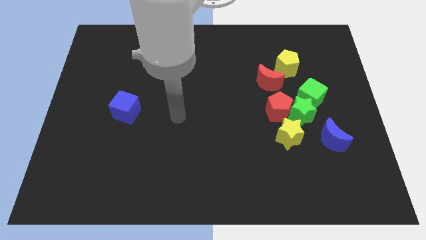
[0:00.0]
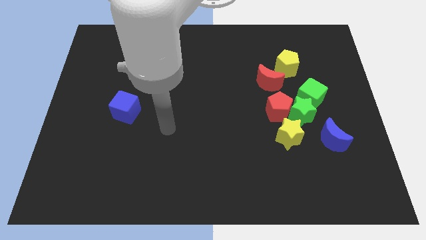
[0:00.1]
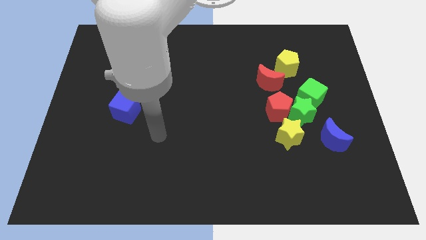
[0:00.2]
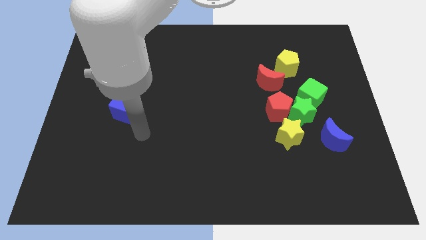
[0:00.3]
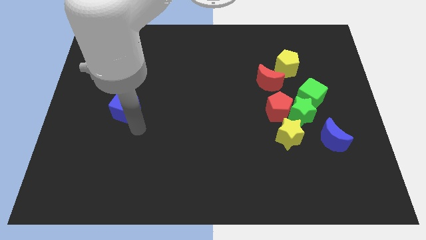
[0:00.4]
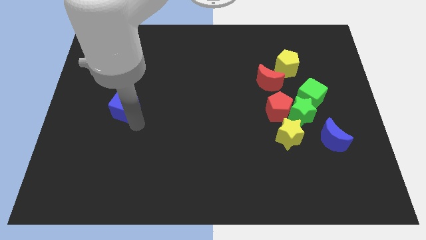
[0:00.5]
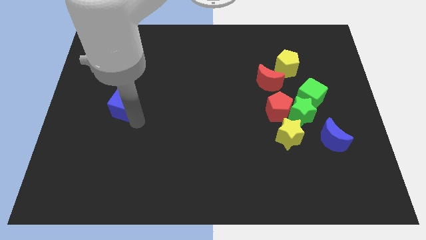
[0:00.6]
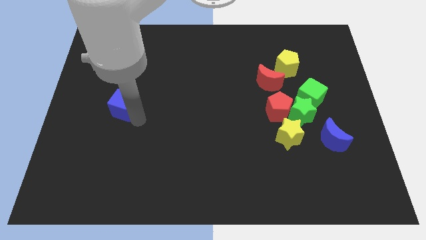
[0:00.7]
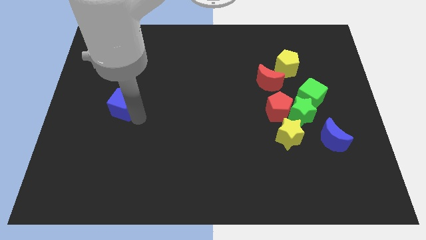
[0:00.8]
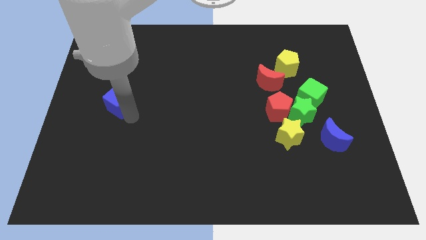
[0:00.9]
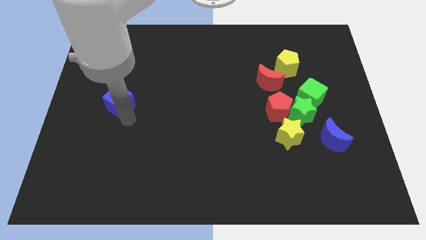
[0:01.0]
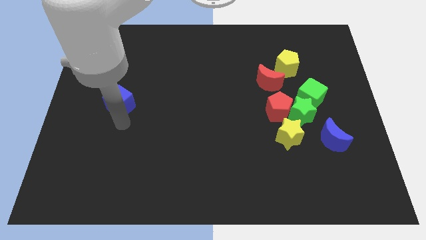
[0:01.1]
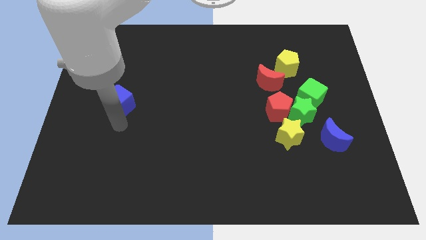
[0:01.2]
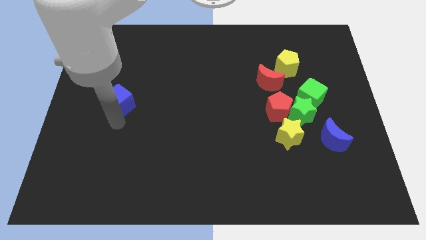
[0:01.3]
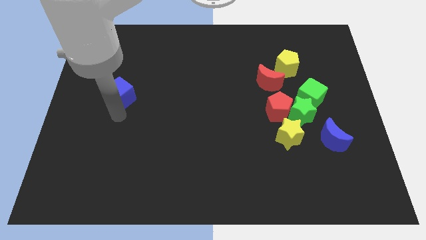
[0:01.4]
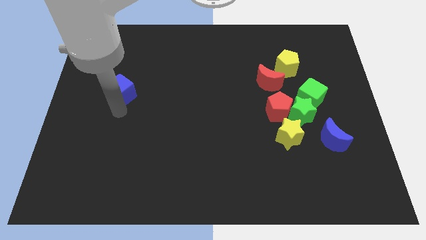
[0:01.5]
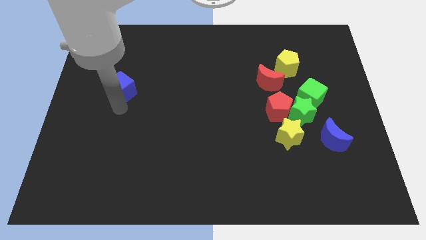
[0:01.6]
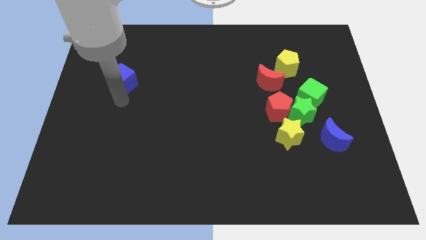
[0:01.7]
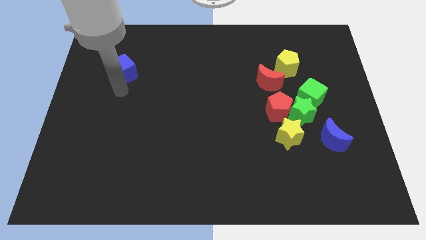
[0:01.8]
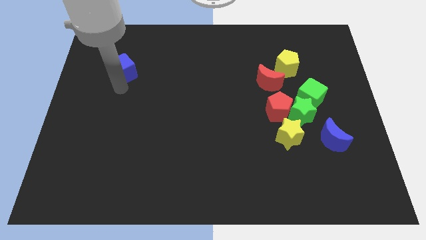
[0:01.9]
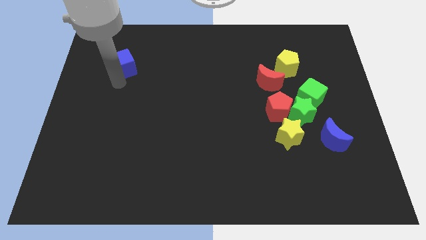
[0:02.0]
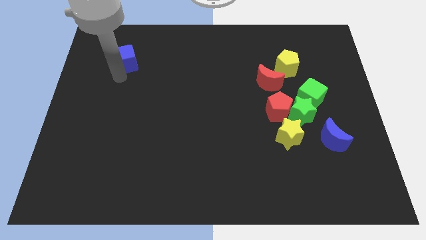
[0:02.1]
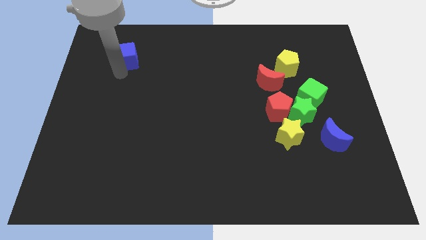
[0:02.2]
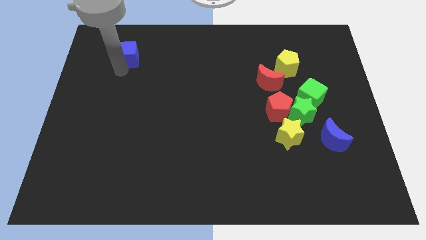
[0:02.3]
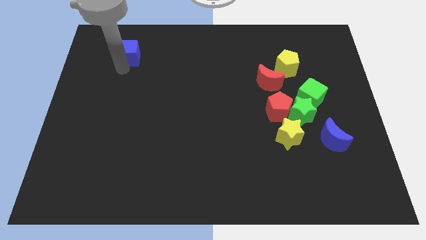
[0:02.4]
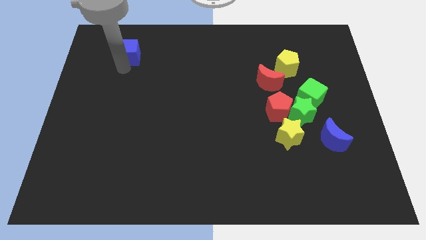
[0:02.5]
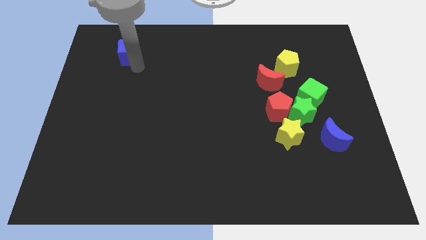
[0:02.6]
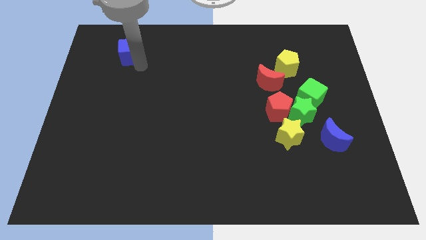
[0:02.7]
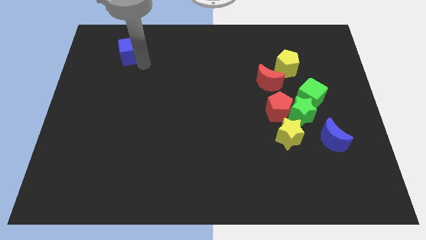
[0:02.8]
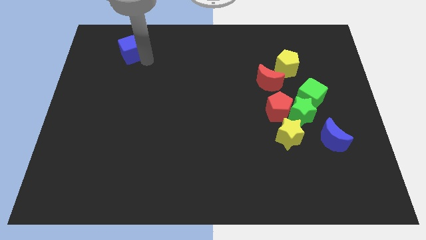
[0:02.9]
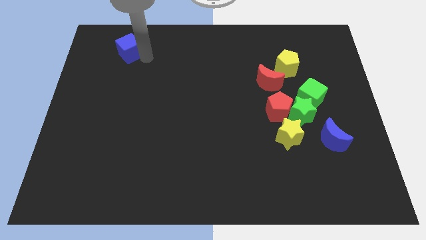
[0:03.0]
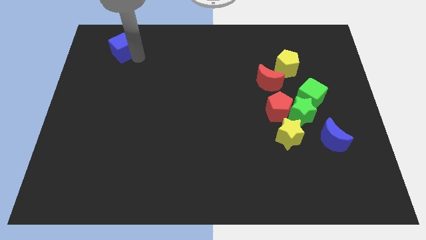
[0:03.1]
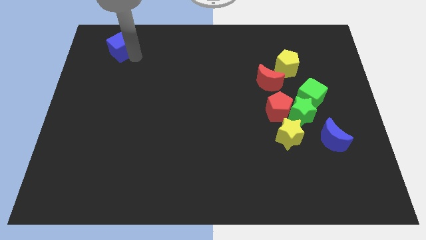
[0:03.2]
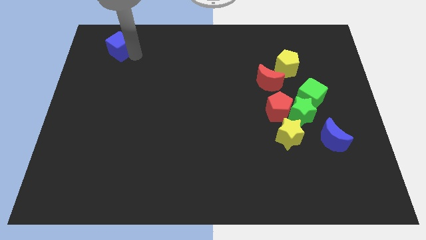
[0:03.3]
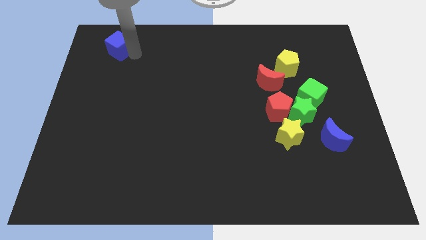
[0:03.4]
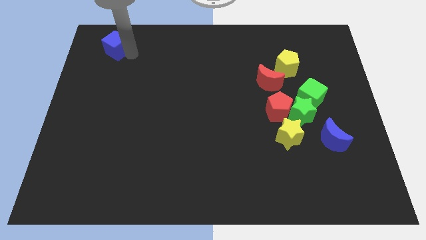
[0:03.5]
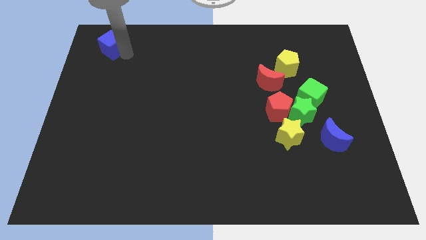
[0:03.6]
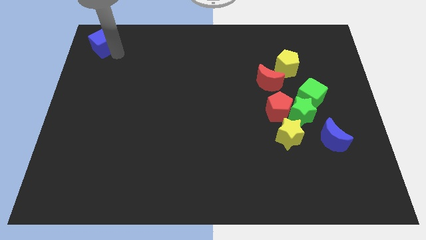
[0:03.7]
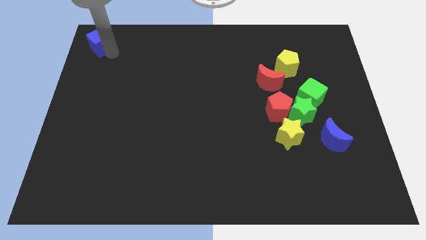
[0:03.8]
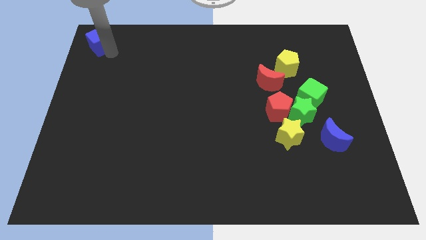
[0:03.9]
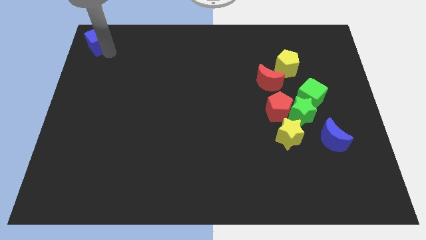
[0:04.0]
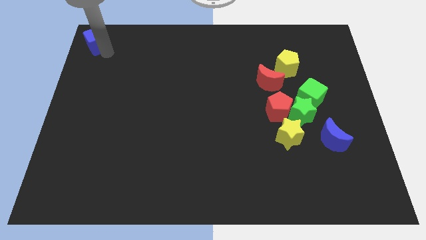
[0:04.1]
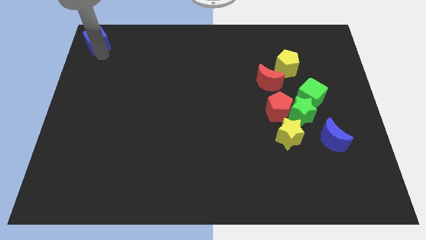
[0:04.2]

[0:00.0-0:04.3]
put the blue cube at the top left corner of the board

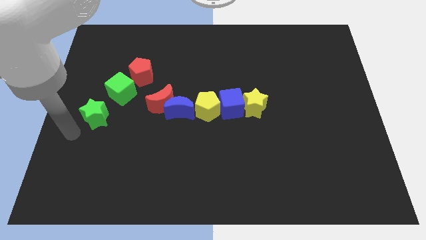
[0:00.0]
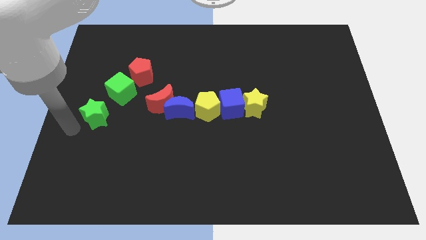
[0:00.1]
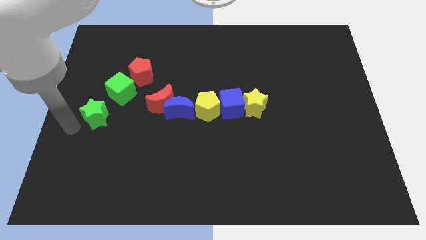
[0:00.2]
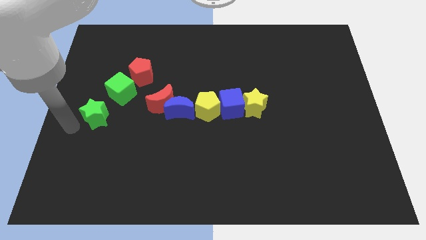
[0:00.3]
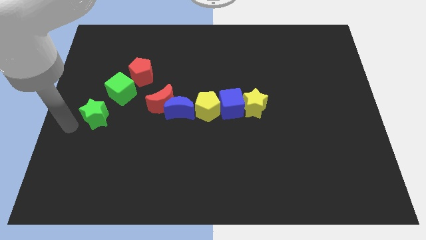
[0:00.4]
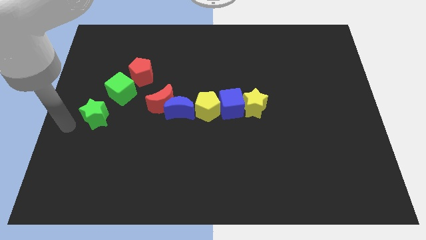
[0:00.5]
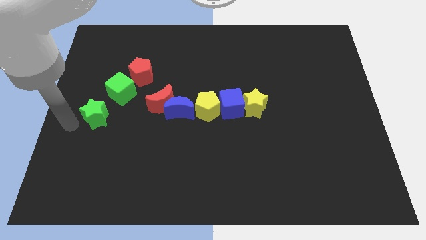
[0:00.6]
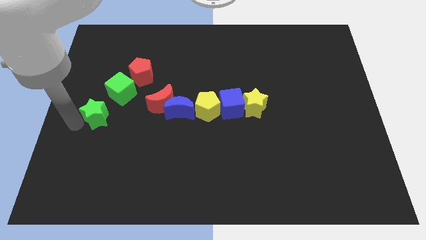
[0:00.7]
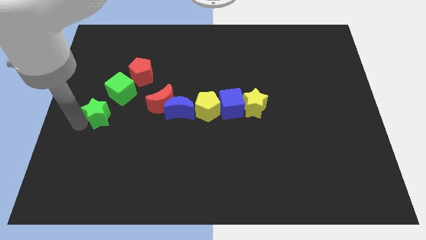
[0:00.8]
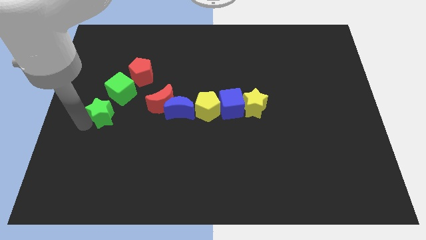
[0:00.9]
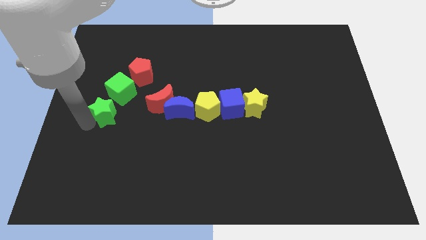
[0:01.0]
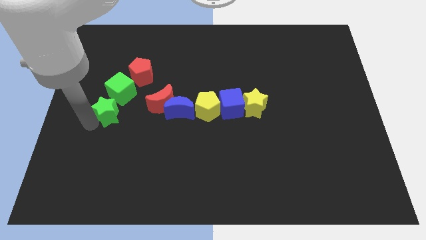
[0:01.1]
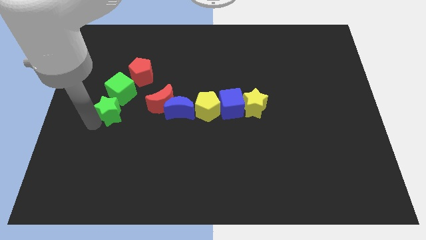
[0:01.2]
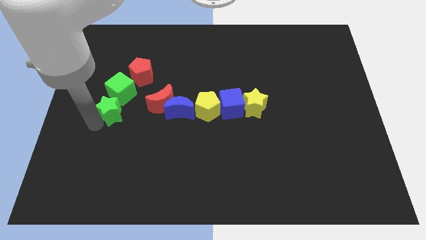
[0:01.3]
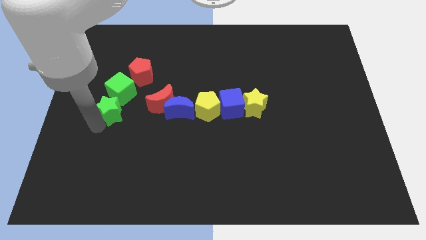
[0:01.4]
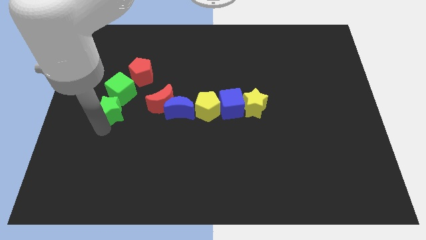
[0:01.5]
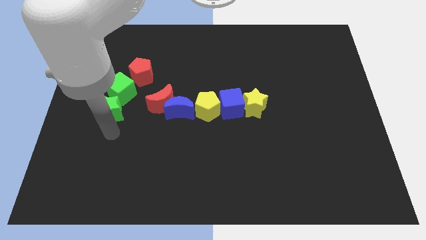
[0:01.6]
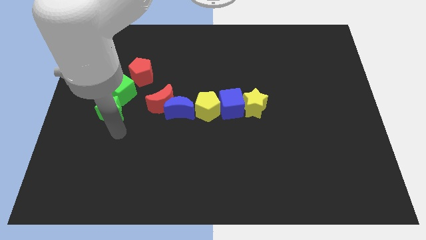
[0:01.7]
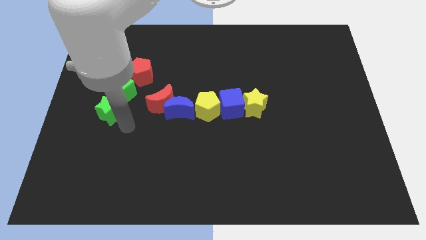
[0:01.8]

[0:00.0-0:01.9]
place the green star towards the green cube

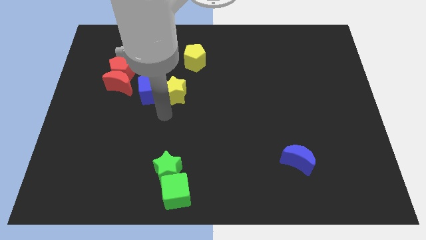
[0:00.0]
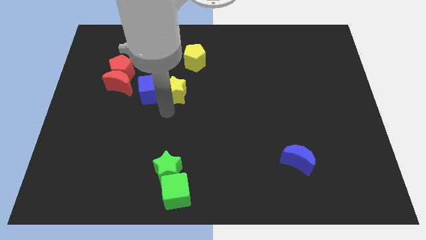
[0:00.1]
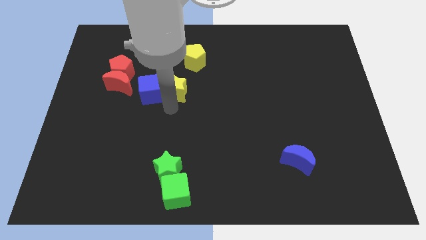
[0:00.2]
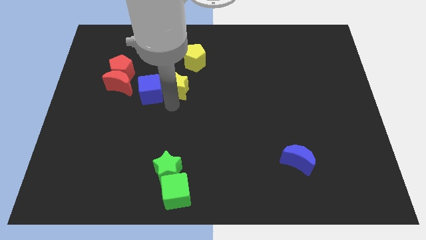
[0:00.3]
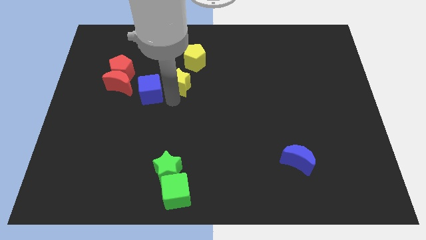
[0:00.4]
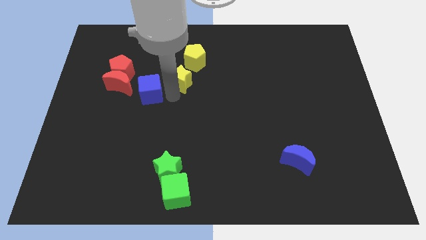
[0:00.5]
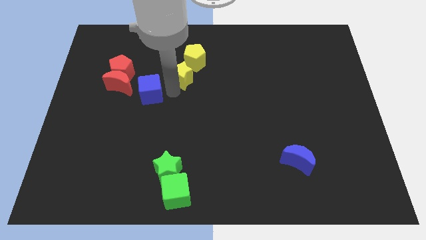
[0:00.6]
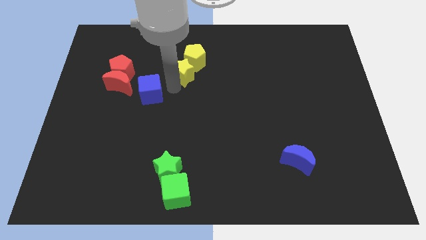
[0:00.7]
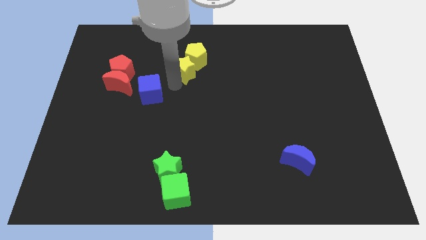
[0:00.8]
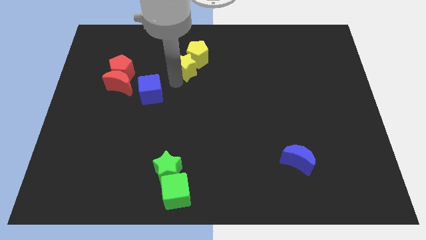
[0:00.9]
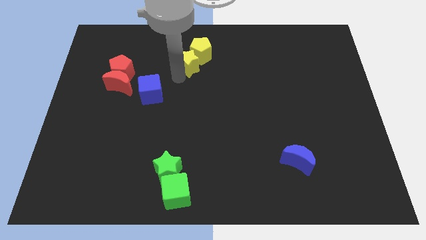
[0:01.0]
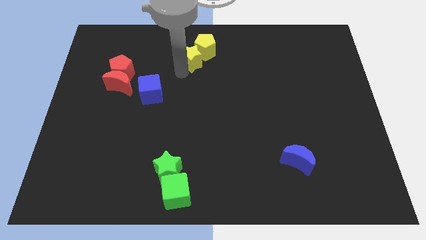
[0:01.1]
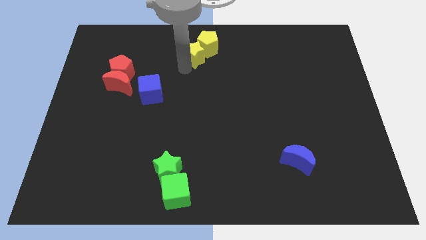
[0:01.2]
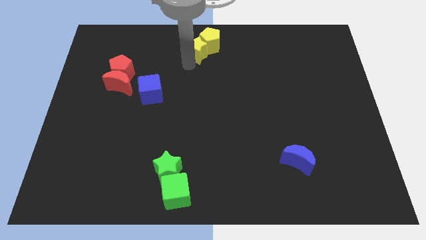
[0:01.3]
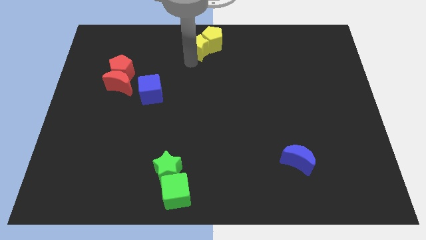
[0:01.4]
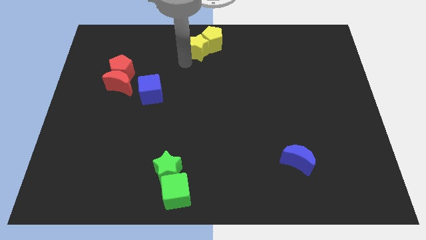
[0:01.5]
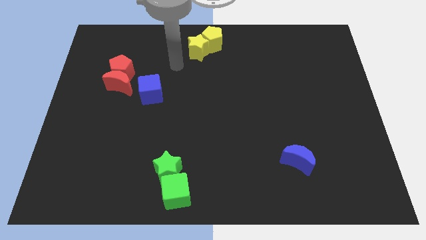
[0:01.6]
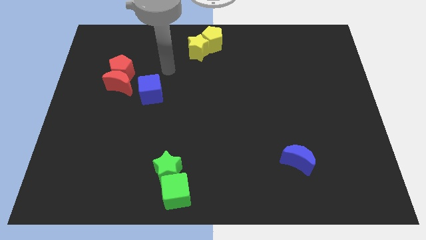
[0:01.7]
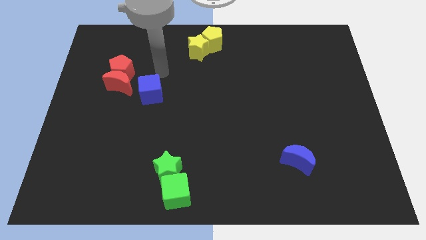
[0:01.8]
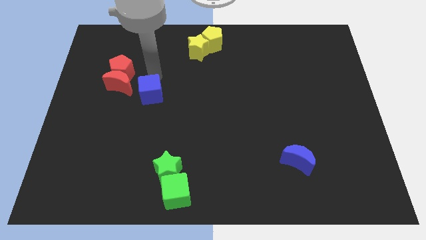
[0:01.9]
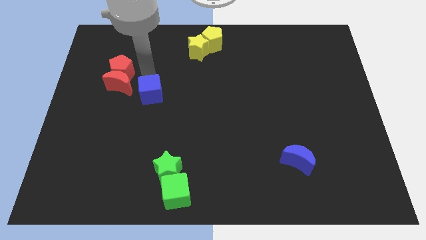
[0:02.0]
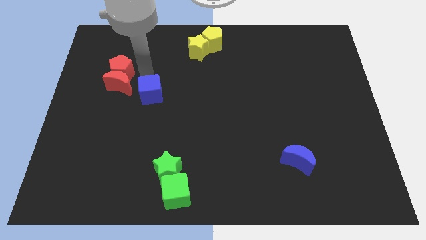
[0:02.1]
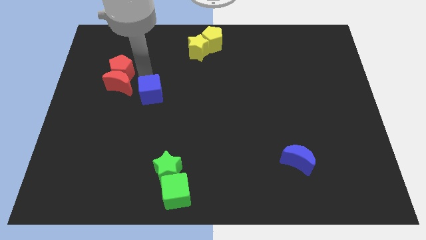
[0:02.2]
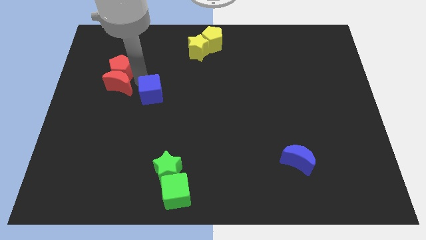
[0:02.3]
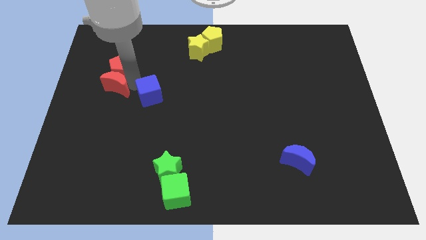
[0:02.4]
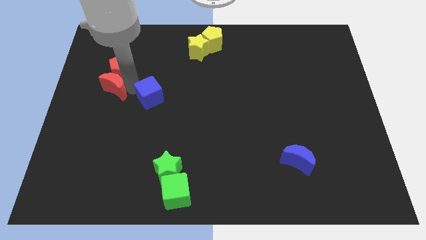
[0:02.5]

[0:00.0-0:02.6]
move the yellow blocks to the top center of the board

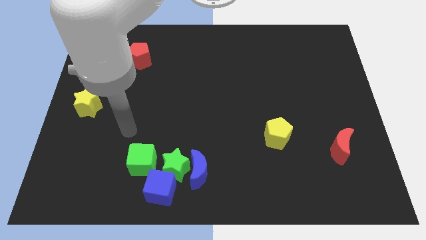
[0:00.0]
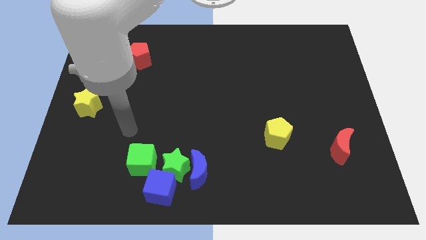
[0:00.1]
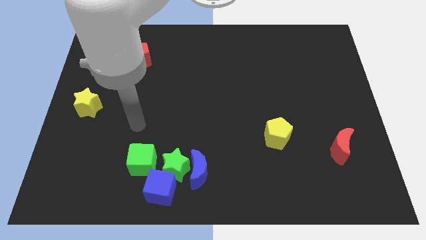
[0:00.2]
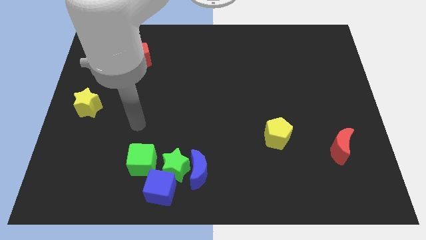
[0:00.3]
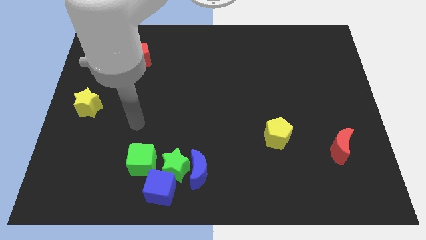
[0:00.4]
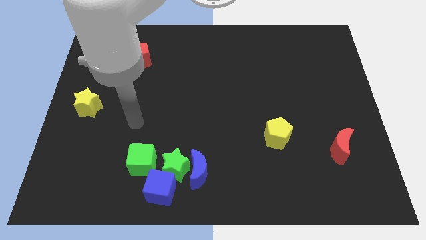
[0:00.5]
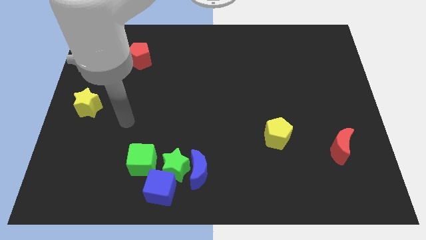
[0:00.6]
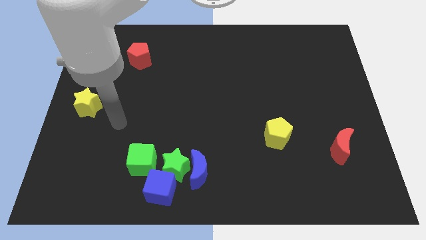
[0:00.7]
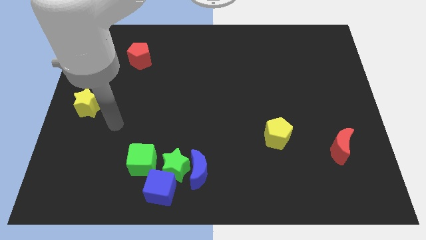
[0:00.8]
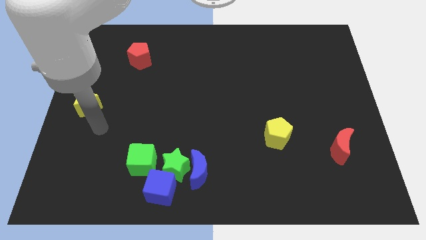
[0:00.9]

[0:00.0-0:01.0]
move the yellow star towards the center left of the board
